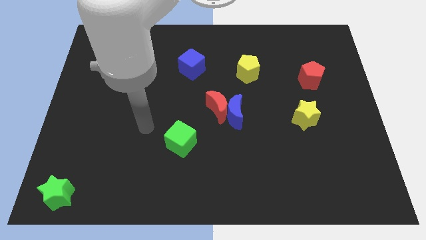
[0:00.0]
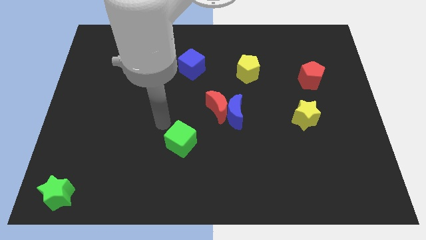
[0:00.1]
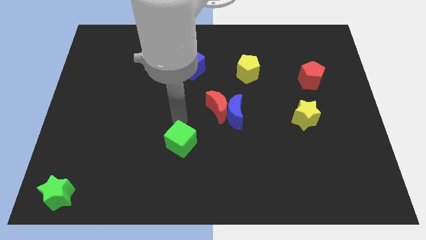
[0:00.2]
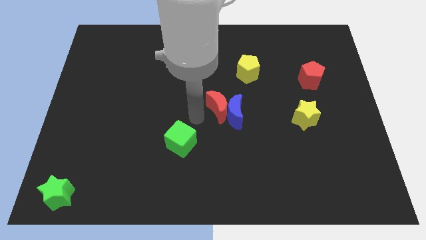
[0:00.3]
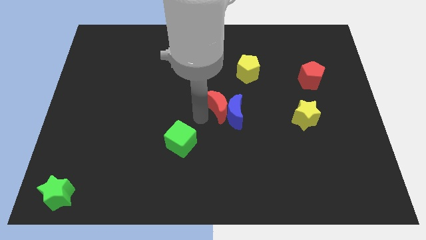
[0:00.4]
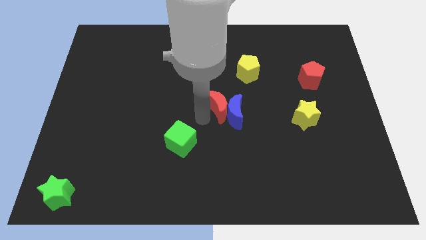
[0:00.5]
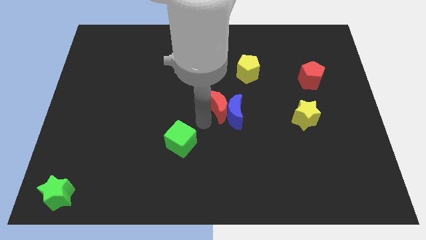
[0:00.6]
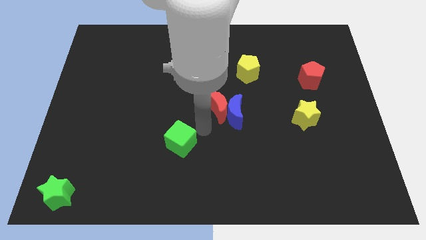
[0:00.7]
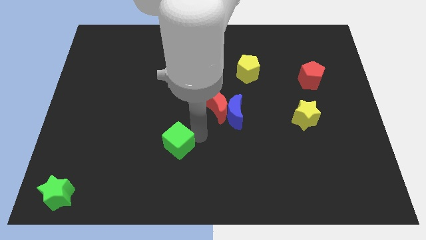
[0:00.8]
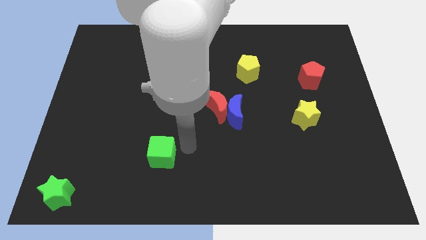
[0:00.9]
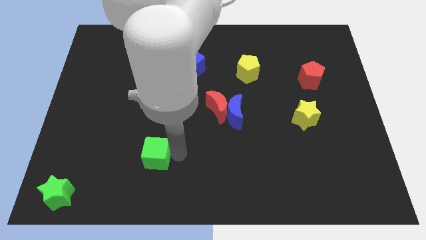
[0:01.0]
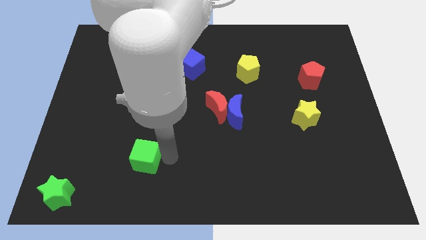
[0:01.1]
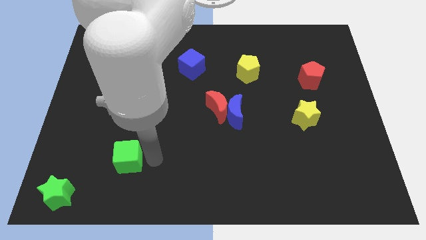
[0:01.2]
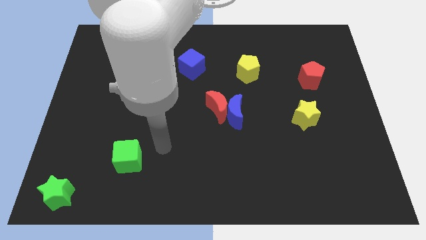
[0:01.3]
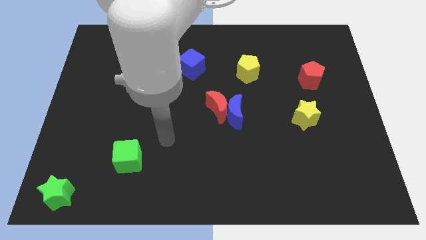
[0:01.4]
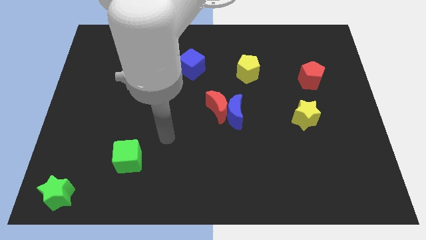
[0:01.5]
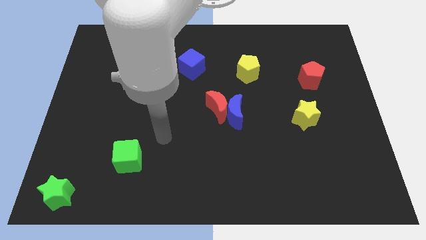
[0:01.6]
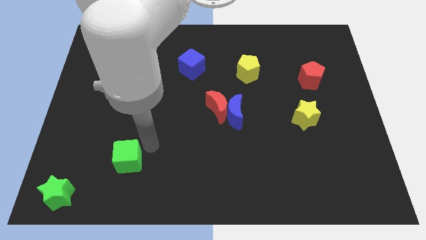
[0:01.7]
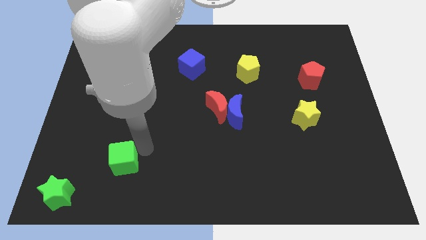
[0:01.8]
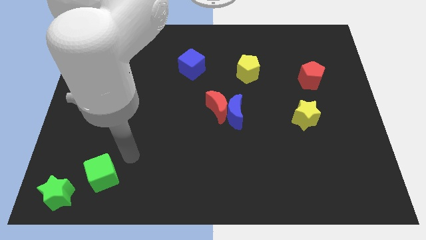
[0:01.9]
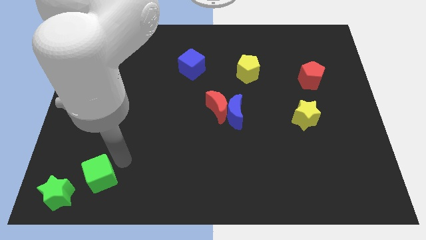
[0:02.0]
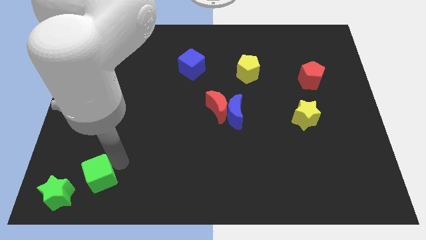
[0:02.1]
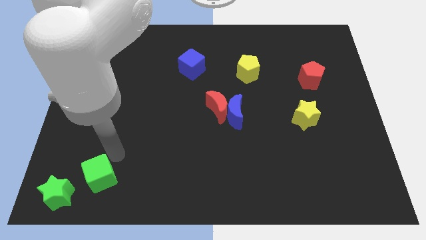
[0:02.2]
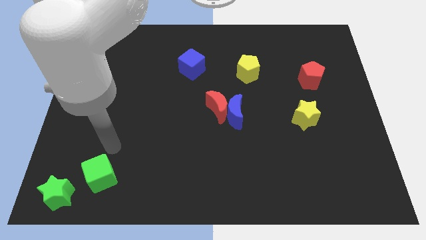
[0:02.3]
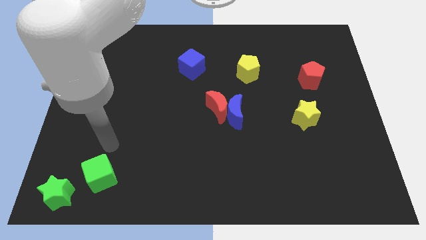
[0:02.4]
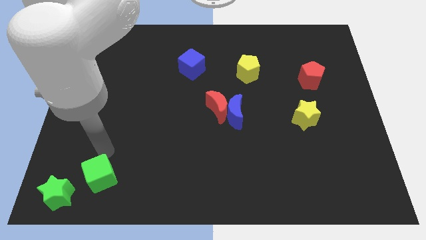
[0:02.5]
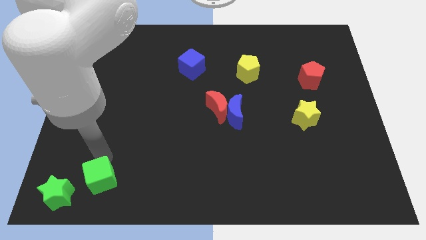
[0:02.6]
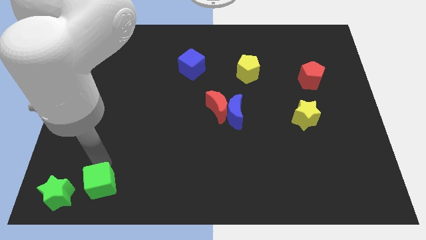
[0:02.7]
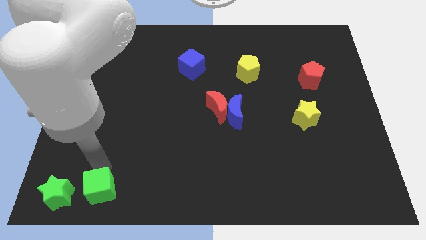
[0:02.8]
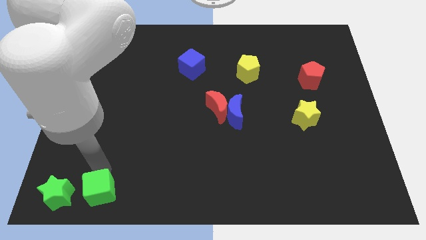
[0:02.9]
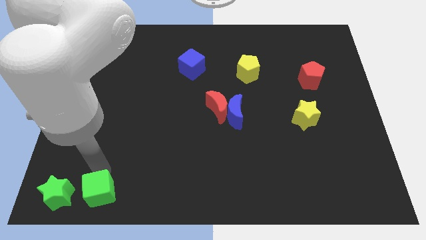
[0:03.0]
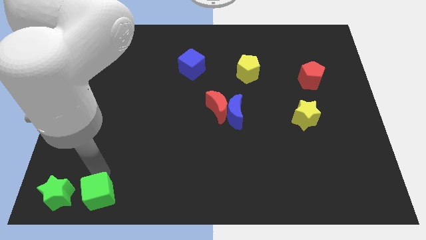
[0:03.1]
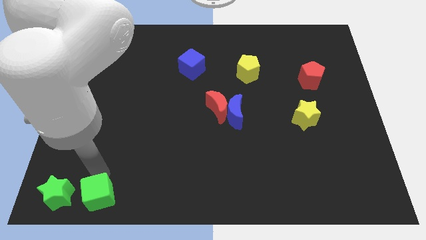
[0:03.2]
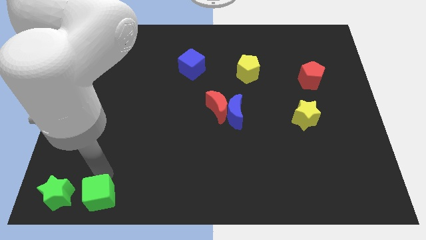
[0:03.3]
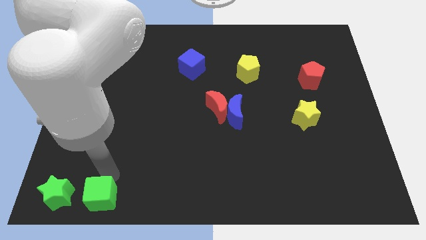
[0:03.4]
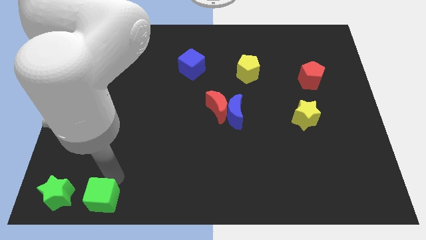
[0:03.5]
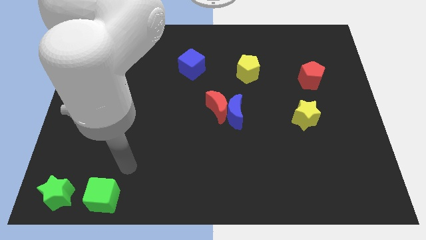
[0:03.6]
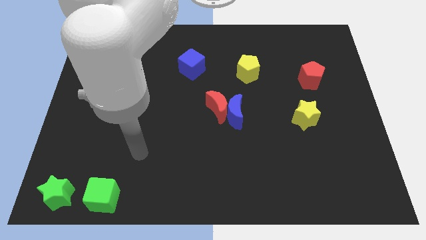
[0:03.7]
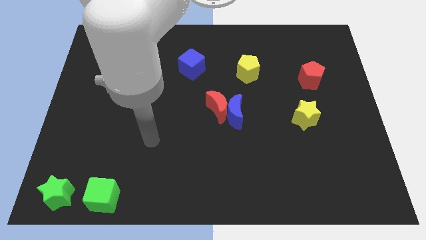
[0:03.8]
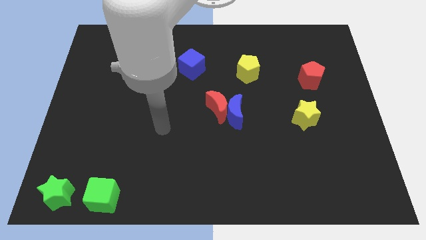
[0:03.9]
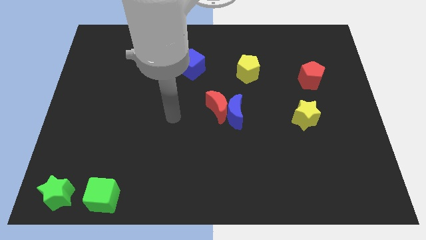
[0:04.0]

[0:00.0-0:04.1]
place the green cube to the right side of the green star

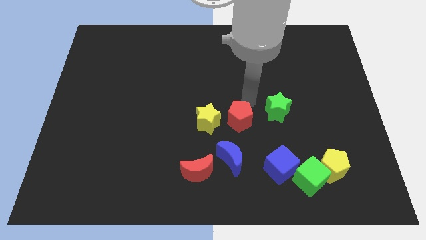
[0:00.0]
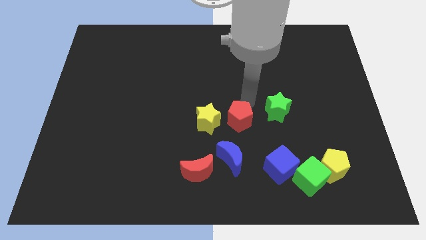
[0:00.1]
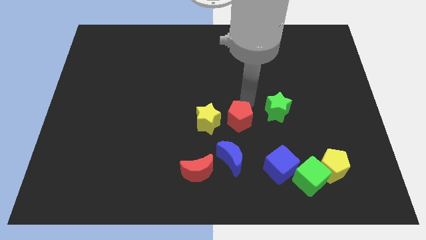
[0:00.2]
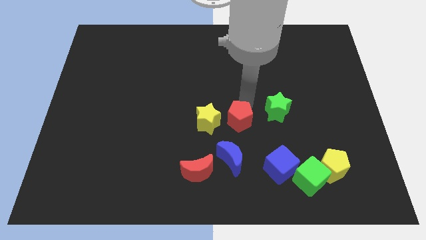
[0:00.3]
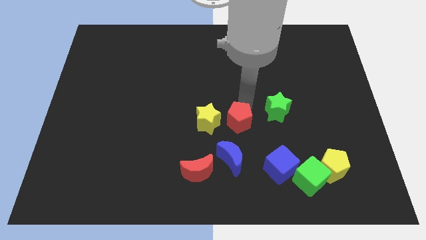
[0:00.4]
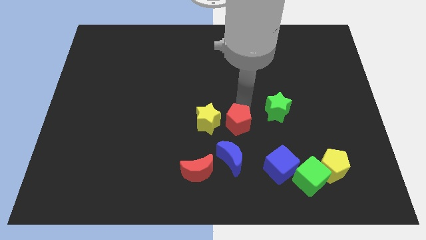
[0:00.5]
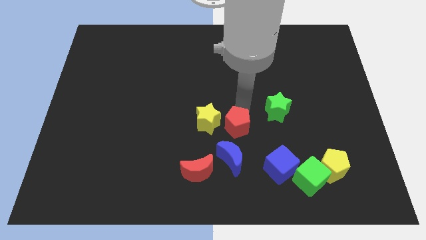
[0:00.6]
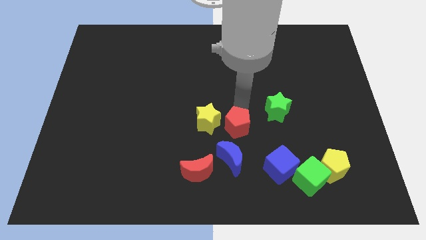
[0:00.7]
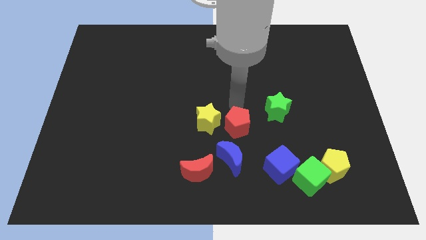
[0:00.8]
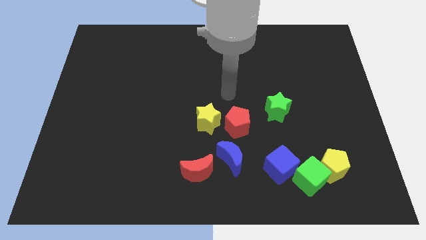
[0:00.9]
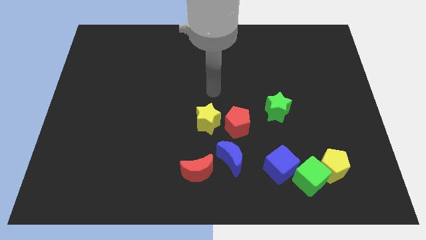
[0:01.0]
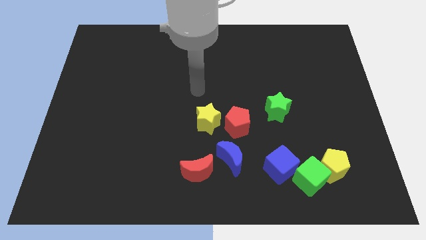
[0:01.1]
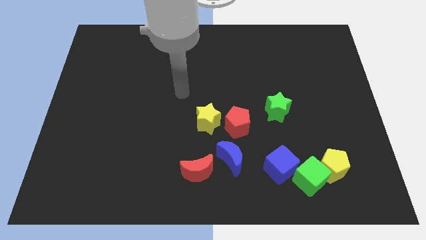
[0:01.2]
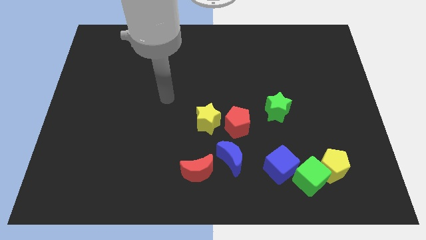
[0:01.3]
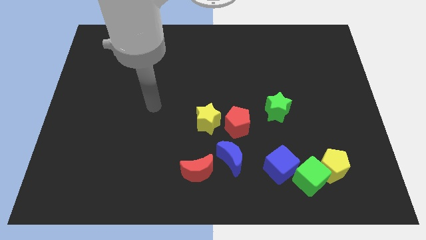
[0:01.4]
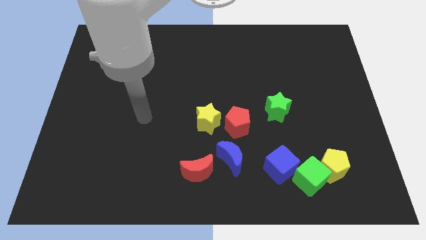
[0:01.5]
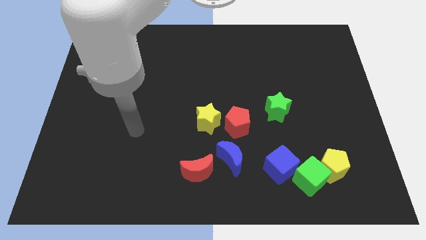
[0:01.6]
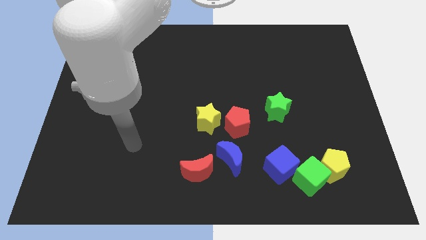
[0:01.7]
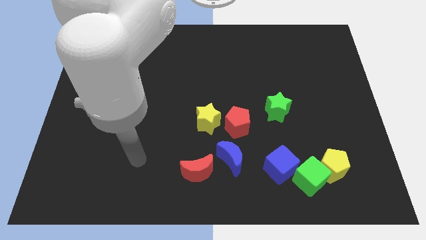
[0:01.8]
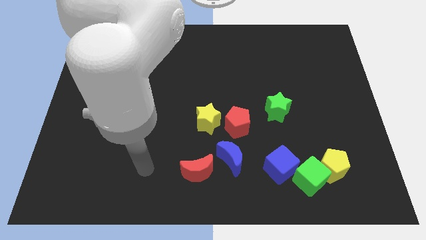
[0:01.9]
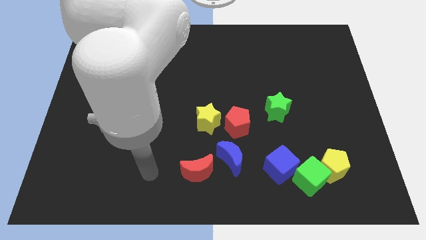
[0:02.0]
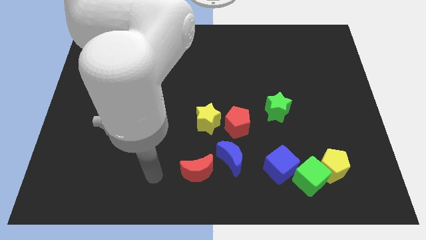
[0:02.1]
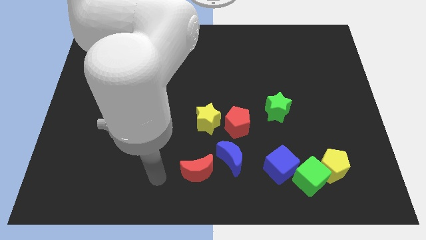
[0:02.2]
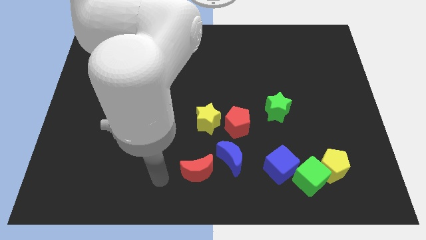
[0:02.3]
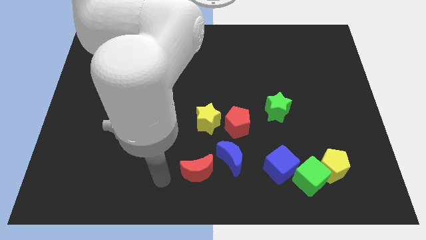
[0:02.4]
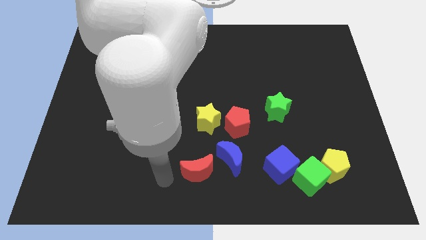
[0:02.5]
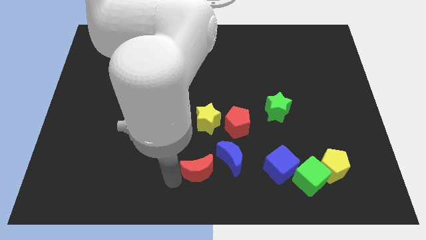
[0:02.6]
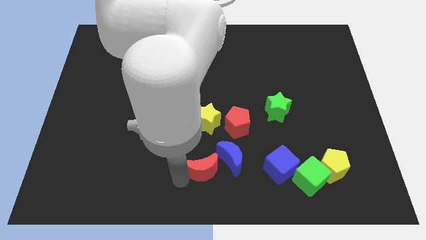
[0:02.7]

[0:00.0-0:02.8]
move your arm away from red pentagon

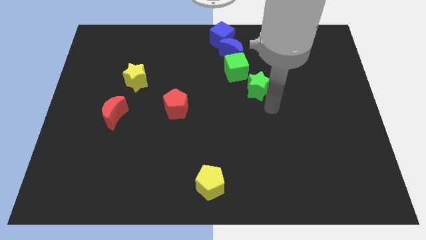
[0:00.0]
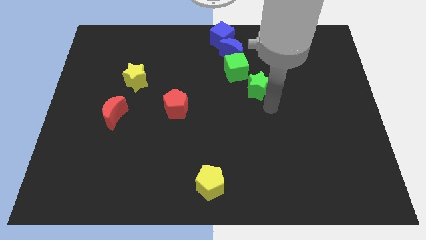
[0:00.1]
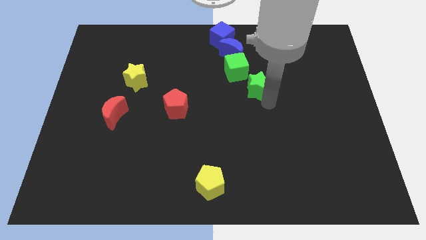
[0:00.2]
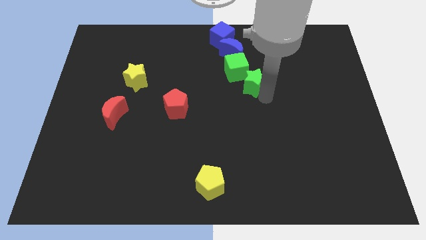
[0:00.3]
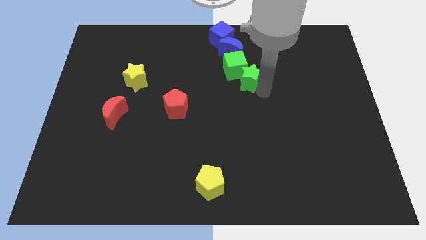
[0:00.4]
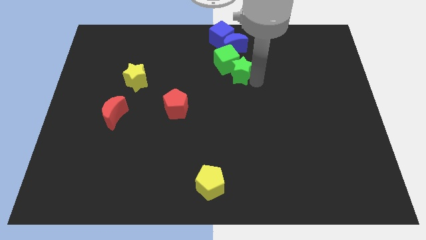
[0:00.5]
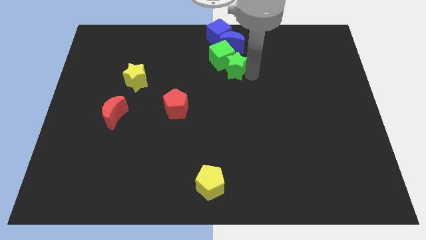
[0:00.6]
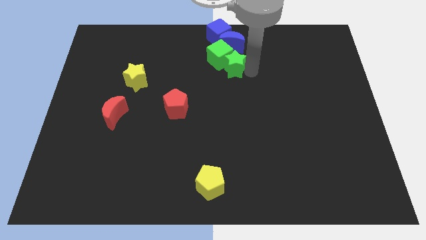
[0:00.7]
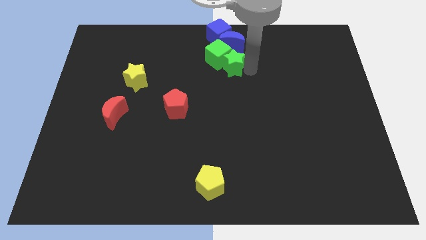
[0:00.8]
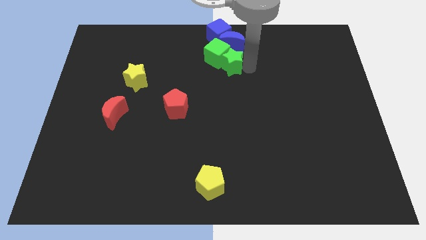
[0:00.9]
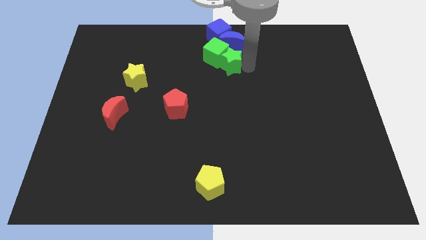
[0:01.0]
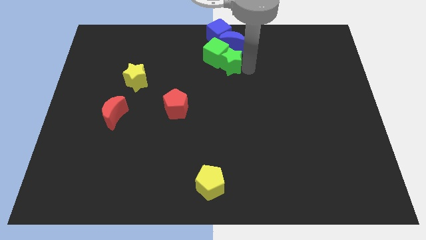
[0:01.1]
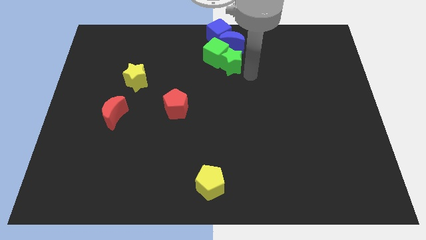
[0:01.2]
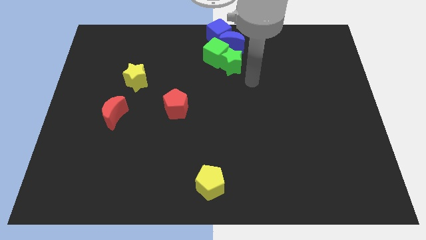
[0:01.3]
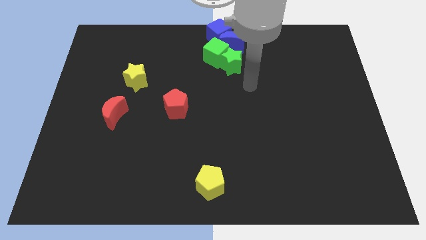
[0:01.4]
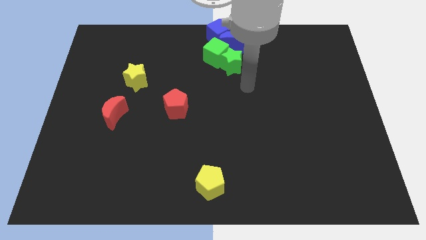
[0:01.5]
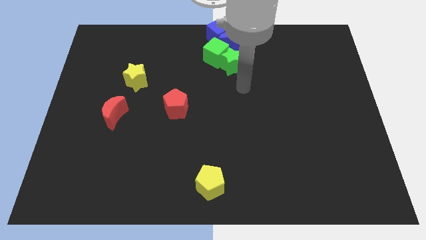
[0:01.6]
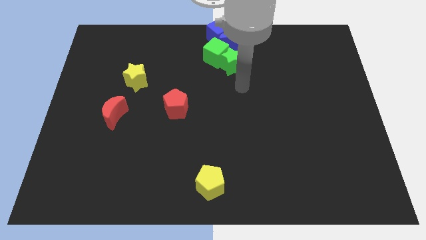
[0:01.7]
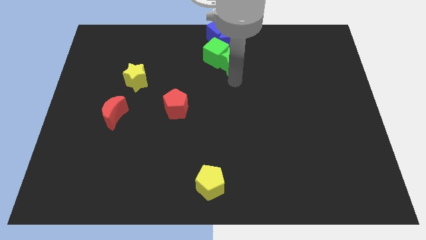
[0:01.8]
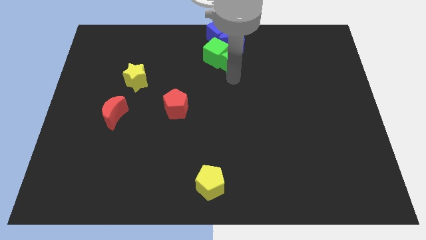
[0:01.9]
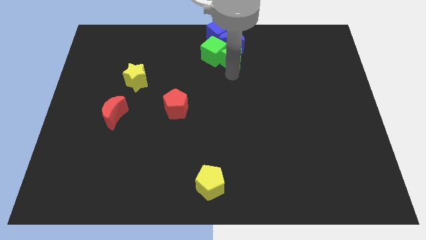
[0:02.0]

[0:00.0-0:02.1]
push the green cube with green star

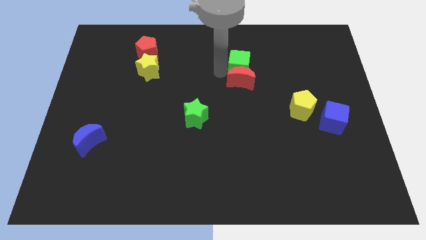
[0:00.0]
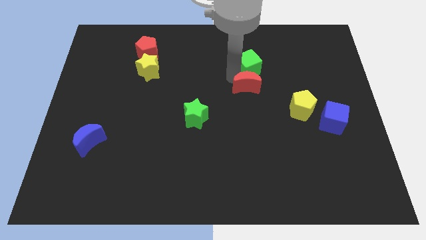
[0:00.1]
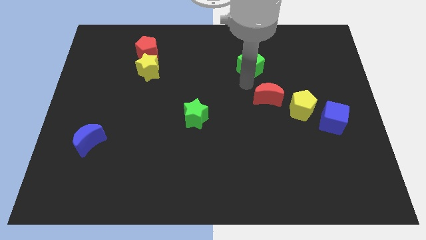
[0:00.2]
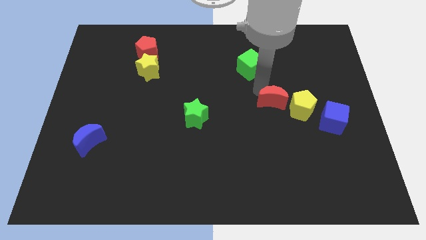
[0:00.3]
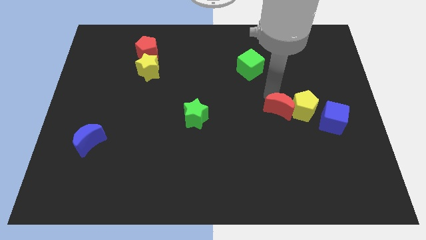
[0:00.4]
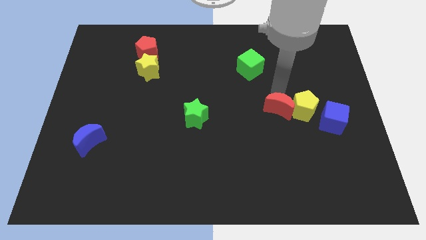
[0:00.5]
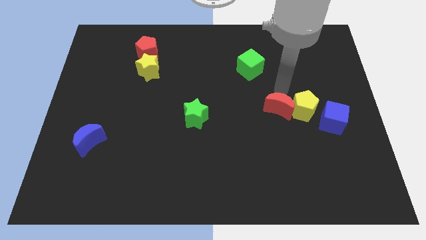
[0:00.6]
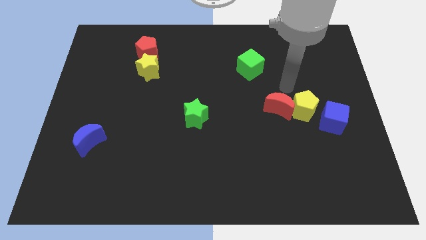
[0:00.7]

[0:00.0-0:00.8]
separate the red crescent from the green cube
